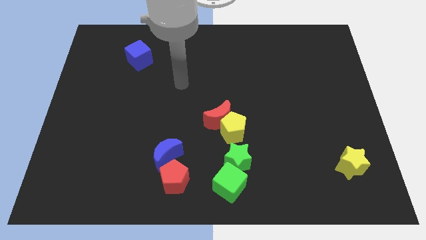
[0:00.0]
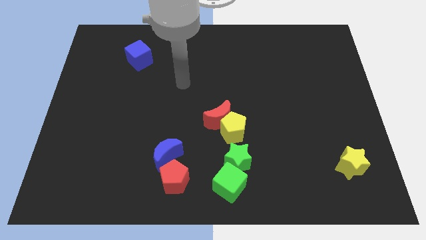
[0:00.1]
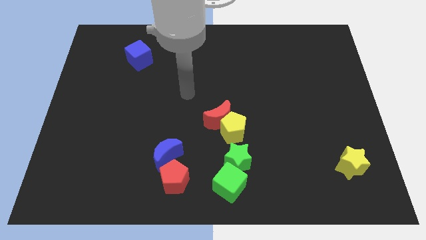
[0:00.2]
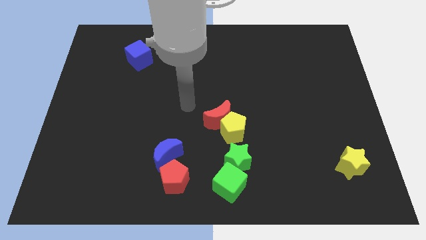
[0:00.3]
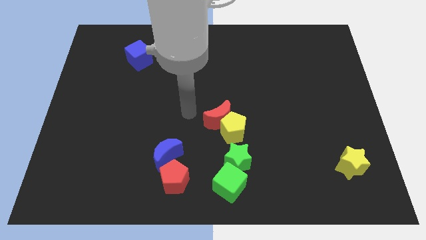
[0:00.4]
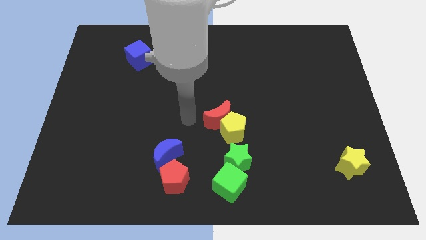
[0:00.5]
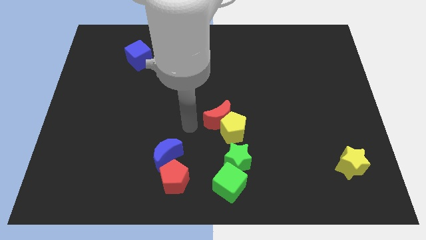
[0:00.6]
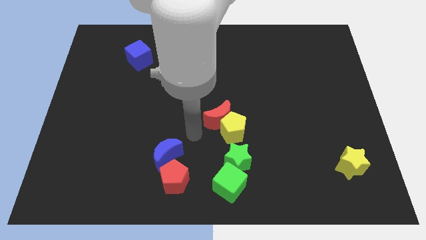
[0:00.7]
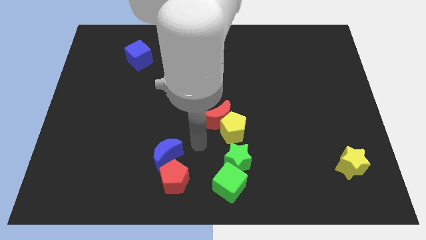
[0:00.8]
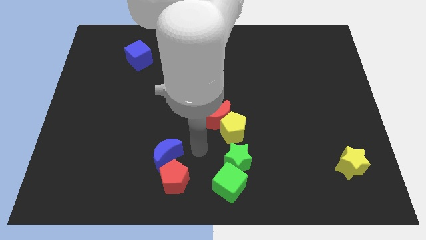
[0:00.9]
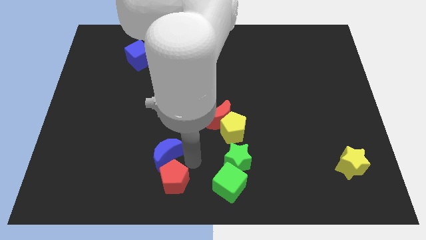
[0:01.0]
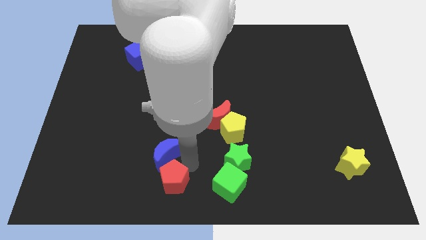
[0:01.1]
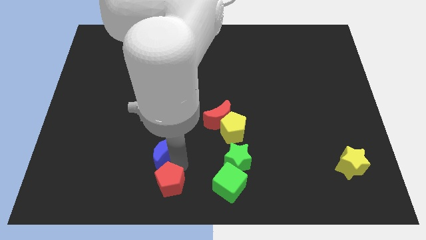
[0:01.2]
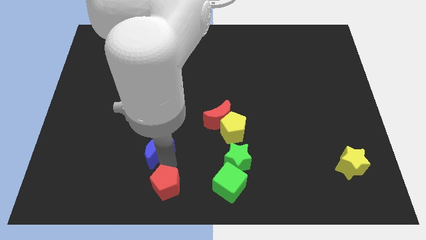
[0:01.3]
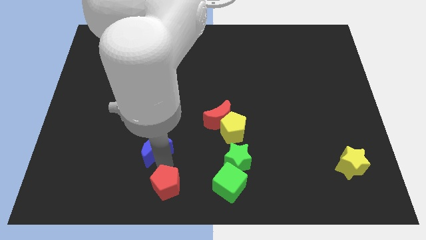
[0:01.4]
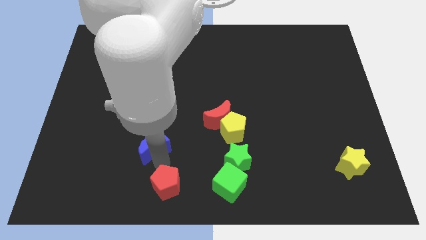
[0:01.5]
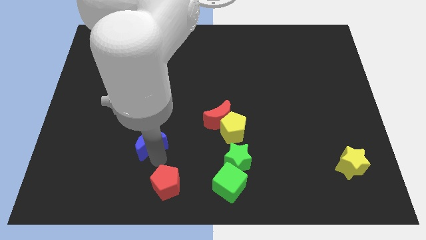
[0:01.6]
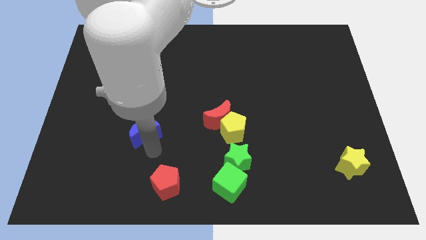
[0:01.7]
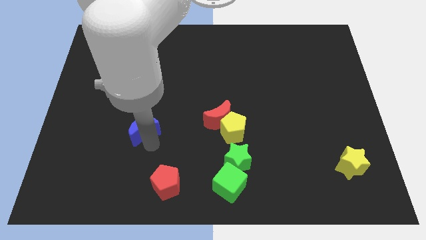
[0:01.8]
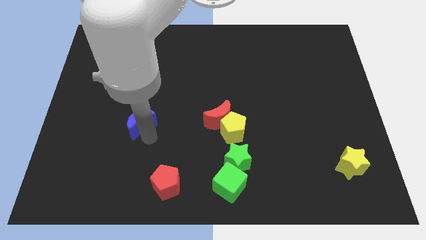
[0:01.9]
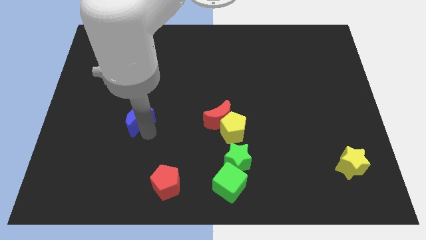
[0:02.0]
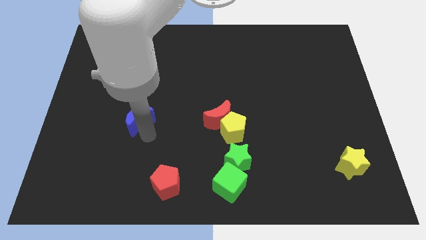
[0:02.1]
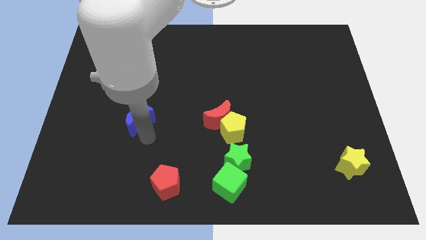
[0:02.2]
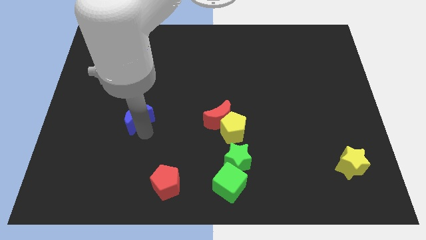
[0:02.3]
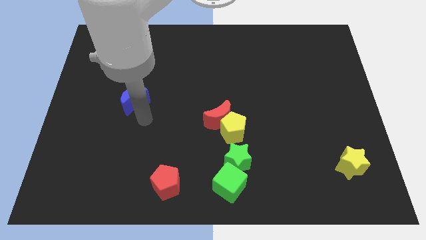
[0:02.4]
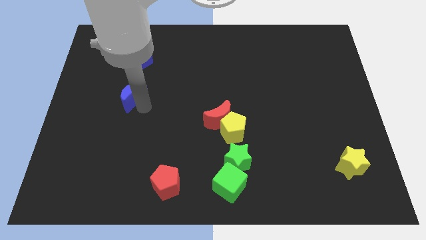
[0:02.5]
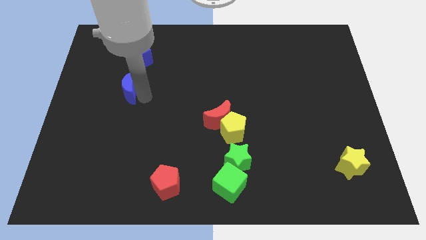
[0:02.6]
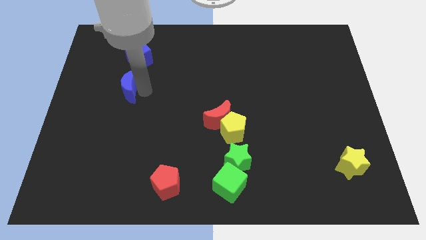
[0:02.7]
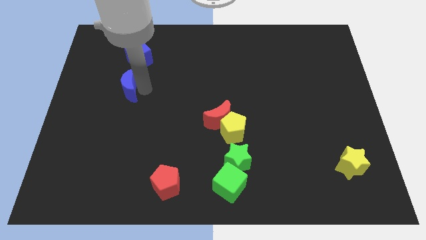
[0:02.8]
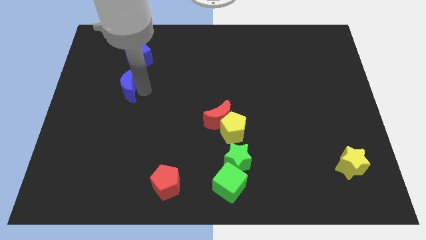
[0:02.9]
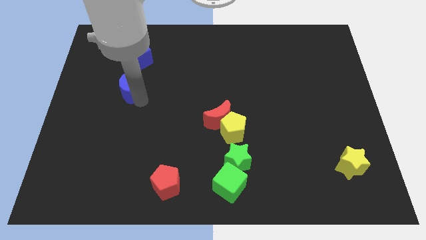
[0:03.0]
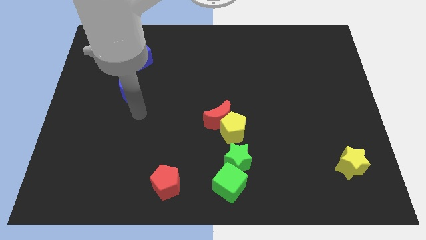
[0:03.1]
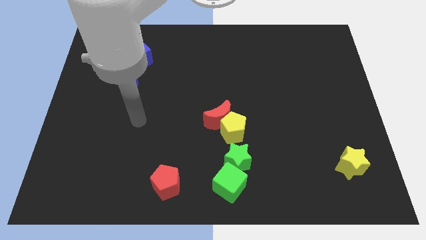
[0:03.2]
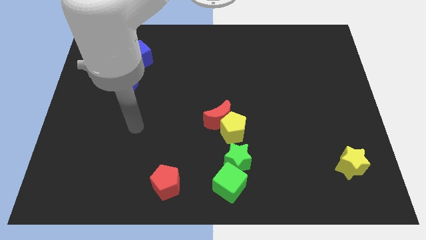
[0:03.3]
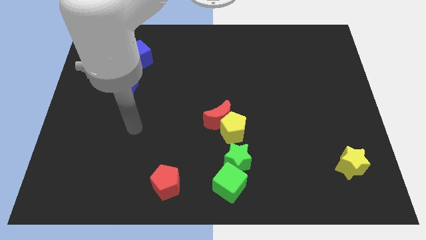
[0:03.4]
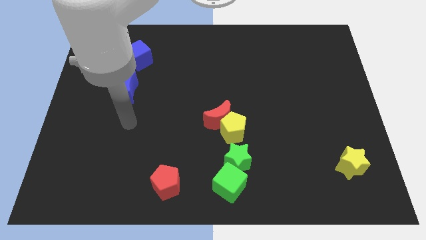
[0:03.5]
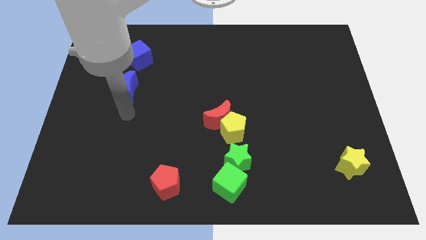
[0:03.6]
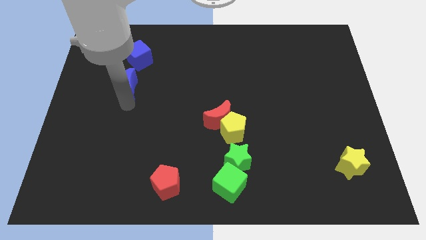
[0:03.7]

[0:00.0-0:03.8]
move the blue crescent to the bottom of the blue cube

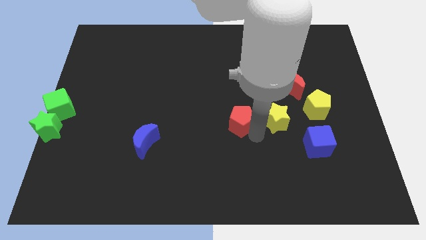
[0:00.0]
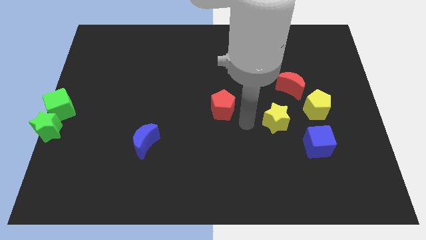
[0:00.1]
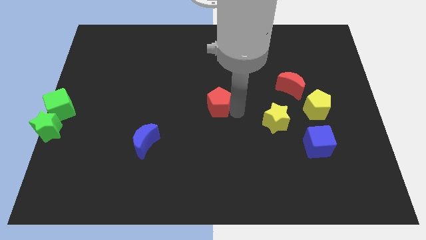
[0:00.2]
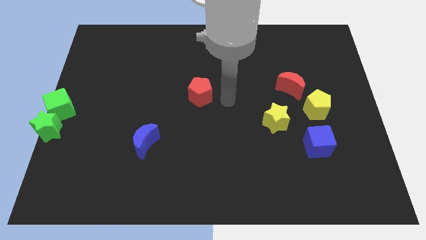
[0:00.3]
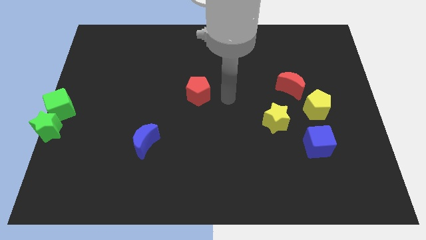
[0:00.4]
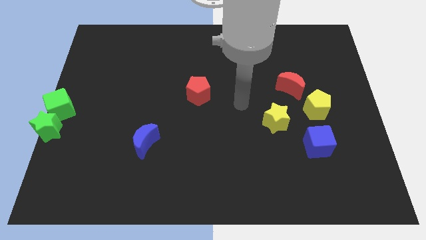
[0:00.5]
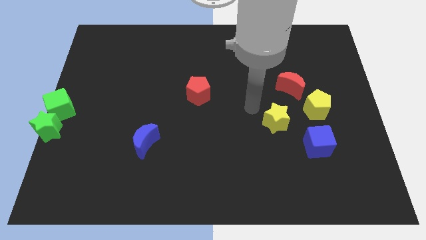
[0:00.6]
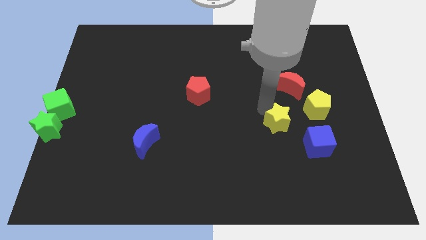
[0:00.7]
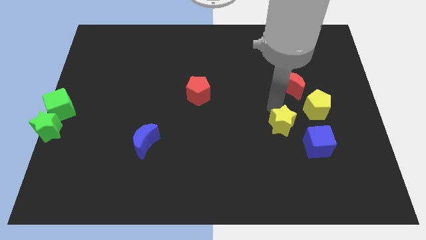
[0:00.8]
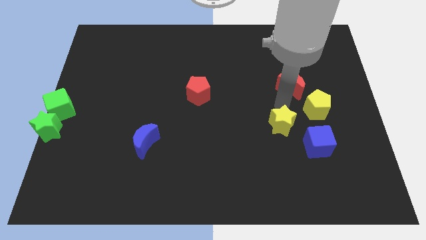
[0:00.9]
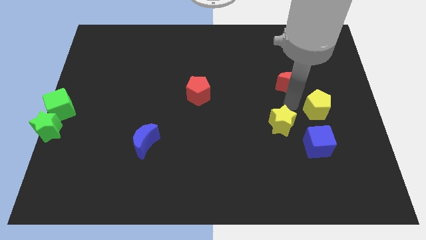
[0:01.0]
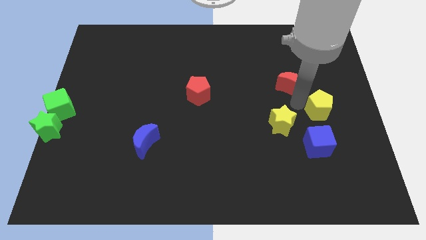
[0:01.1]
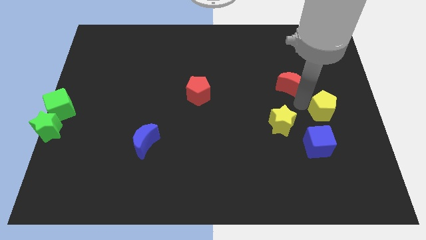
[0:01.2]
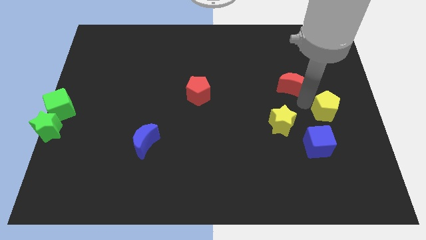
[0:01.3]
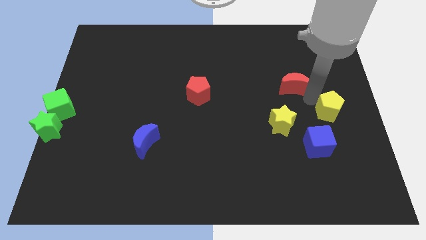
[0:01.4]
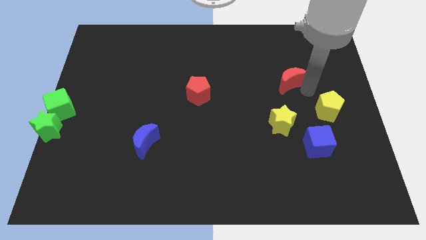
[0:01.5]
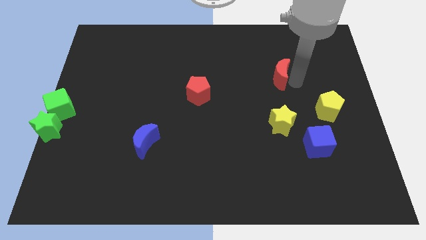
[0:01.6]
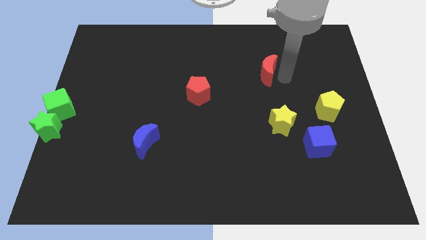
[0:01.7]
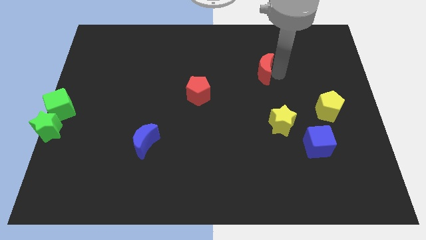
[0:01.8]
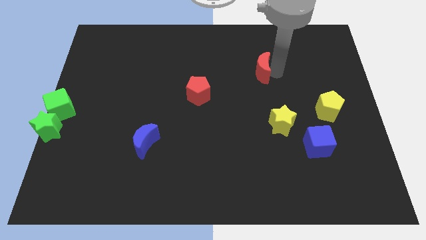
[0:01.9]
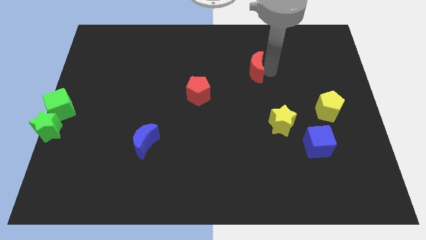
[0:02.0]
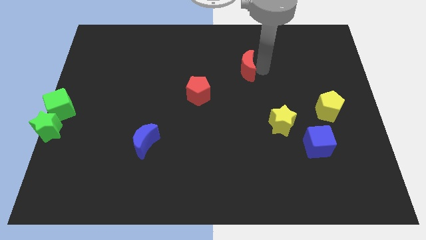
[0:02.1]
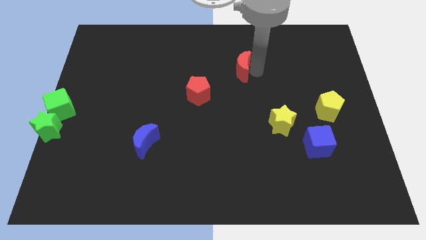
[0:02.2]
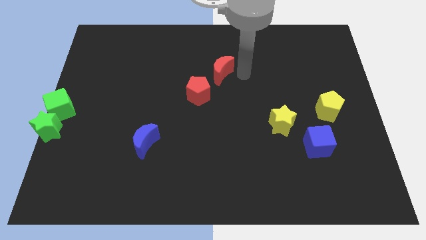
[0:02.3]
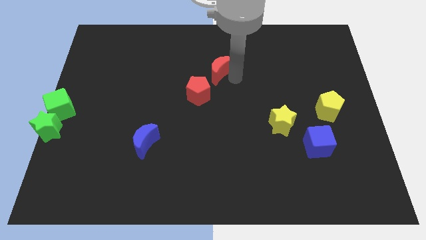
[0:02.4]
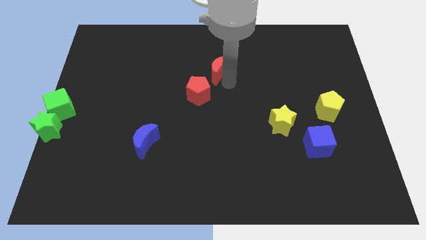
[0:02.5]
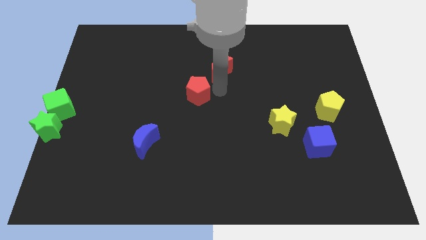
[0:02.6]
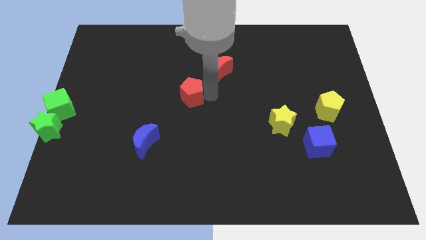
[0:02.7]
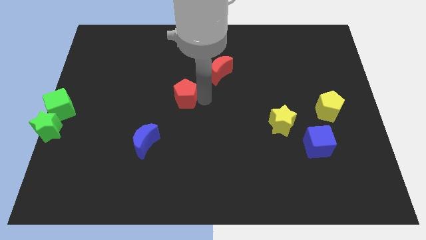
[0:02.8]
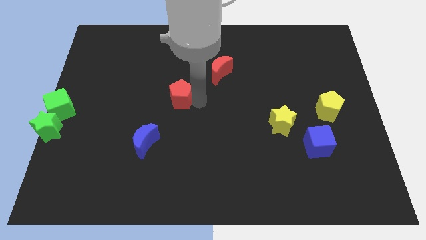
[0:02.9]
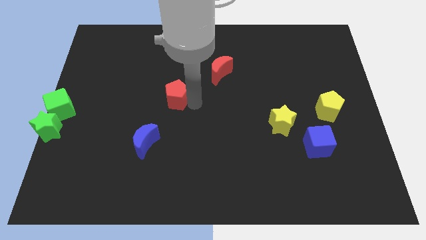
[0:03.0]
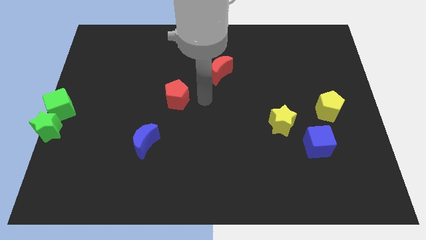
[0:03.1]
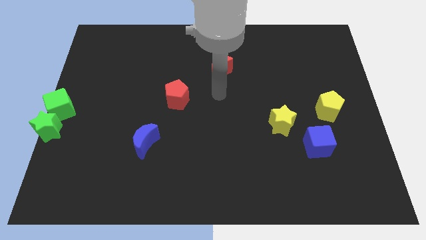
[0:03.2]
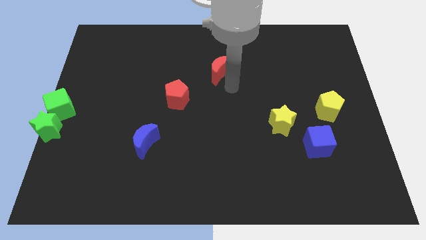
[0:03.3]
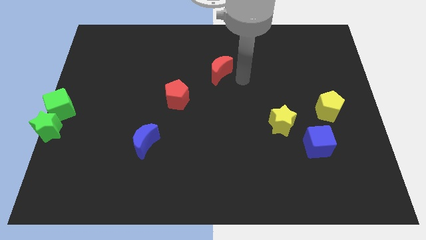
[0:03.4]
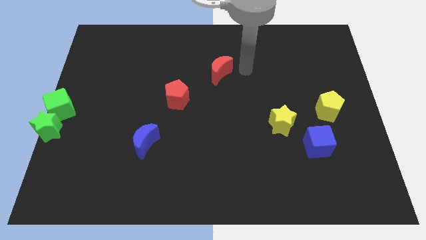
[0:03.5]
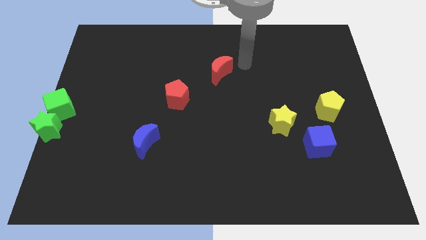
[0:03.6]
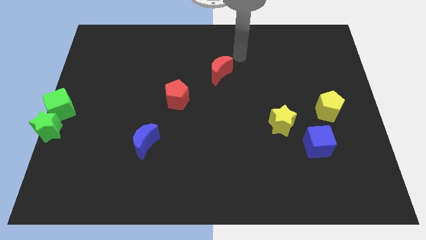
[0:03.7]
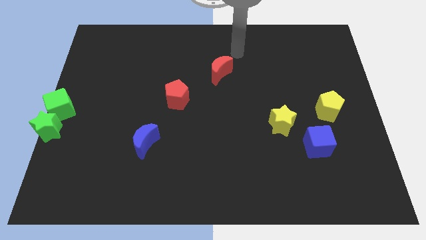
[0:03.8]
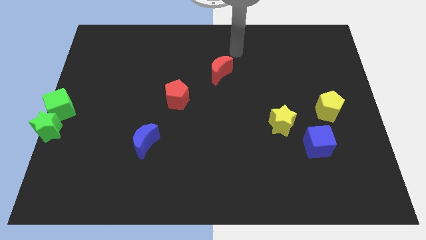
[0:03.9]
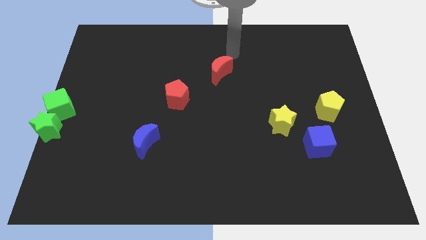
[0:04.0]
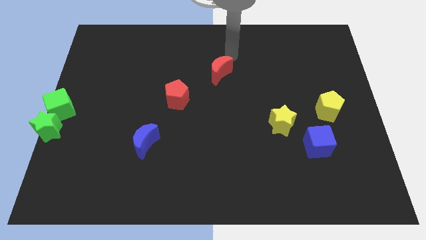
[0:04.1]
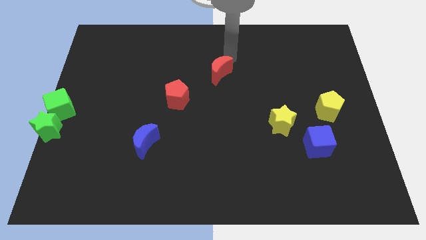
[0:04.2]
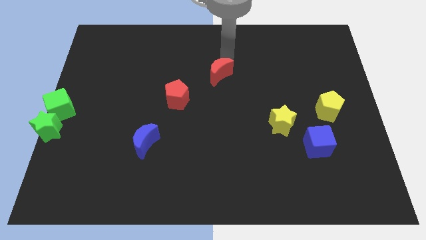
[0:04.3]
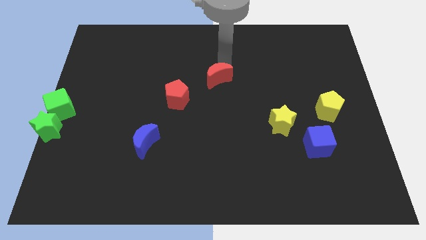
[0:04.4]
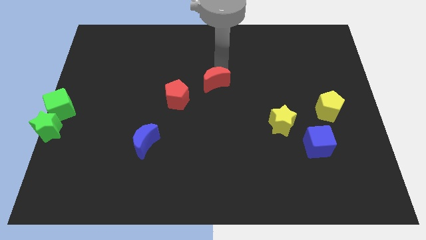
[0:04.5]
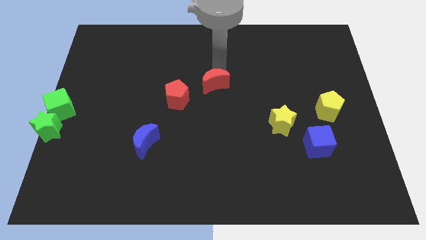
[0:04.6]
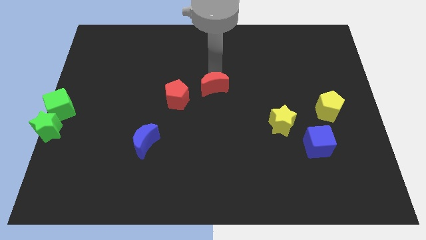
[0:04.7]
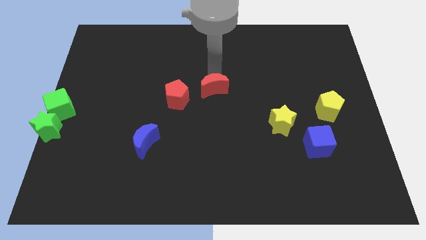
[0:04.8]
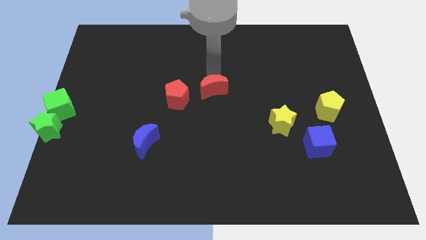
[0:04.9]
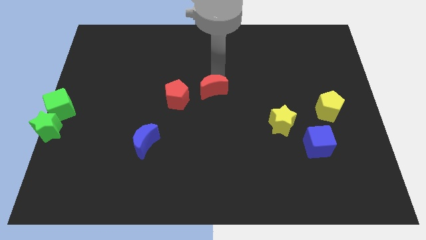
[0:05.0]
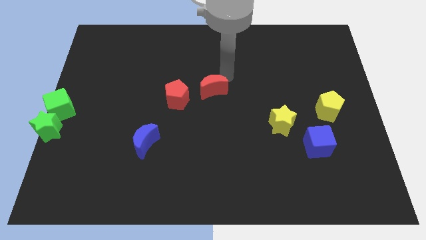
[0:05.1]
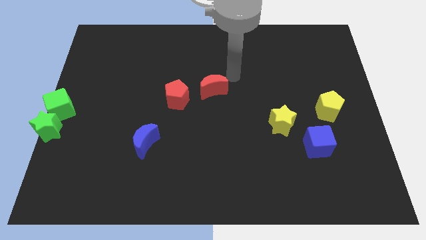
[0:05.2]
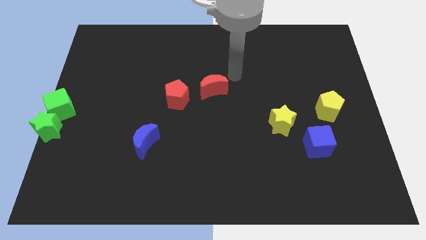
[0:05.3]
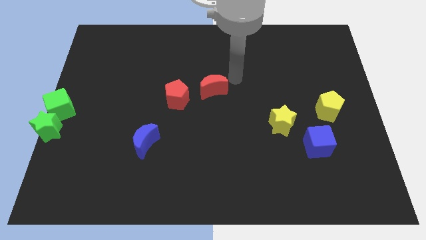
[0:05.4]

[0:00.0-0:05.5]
move the red crescent to the center of the board
